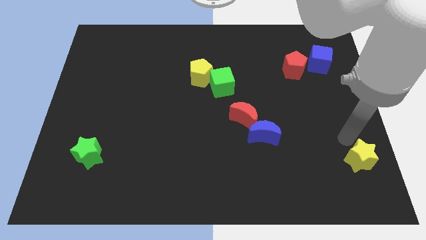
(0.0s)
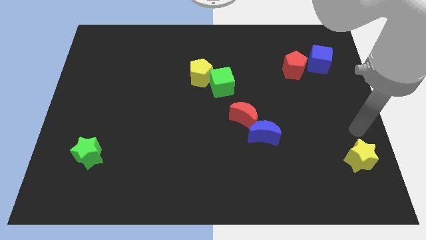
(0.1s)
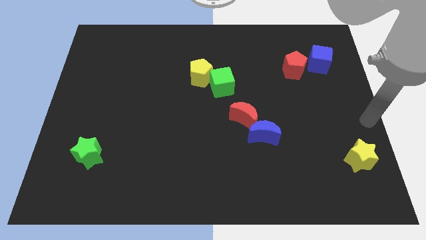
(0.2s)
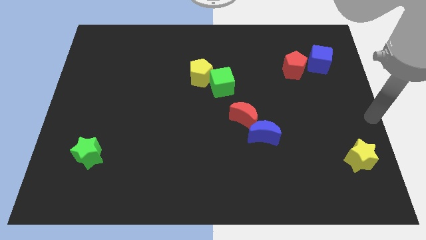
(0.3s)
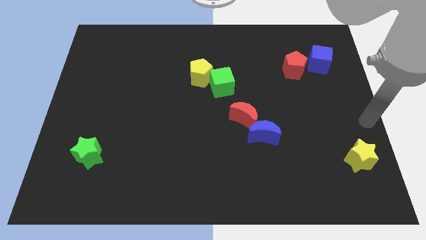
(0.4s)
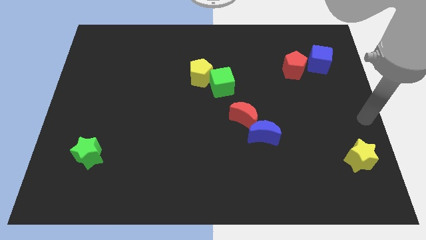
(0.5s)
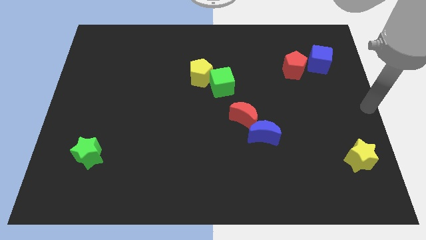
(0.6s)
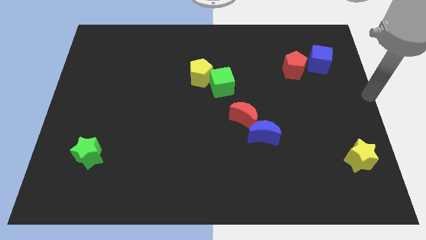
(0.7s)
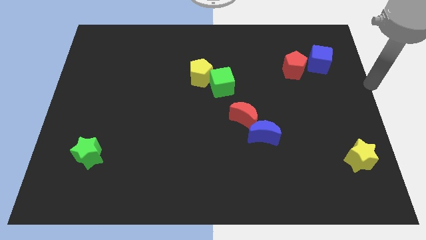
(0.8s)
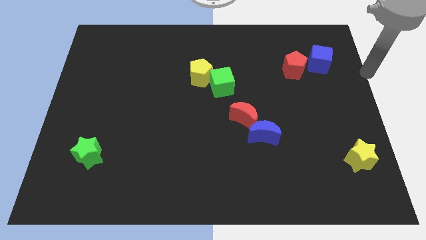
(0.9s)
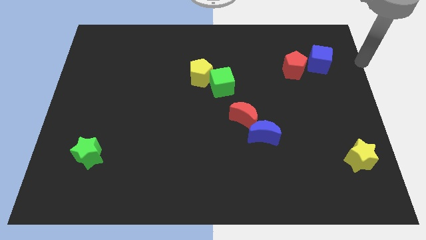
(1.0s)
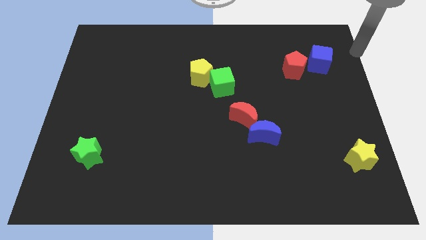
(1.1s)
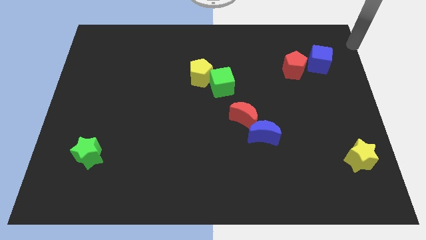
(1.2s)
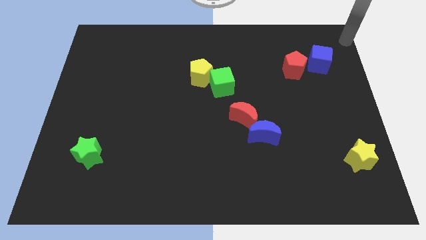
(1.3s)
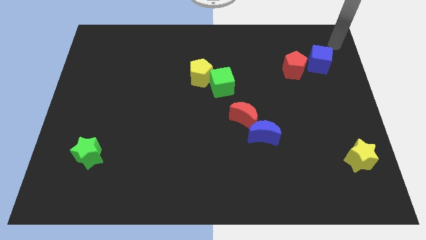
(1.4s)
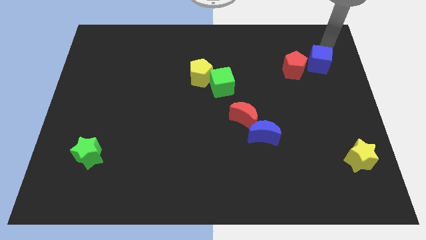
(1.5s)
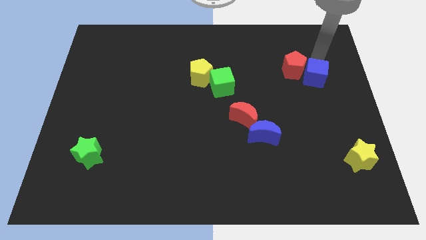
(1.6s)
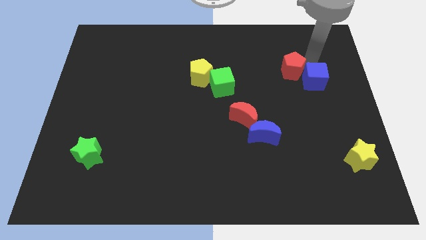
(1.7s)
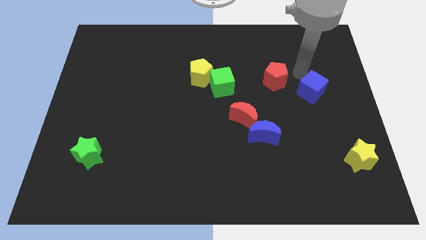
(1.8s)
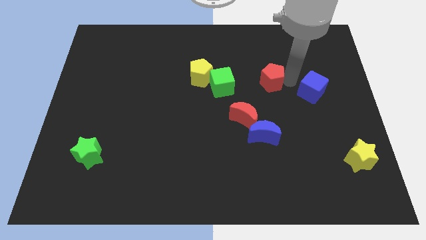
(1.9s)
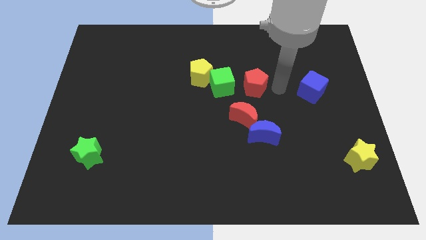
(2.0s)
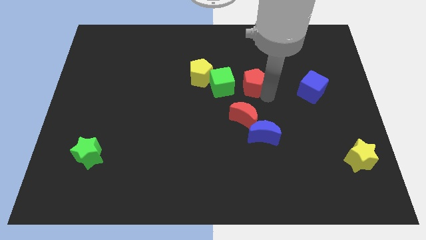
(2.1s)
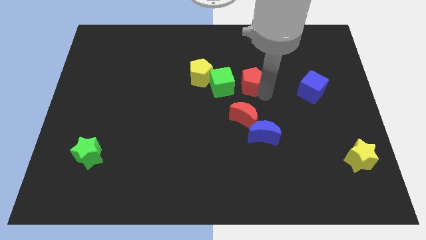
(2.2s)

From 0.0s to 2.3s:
separate the red pentagon and blue cube from each other

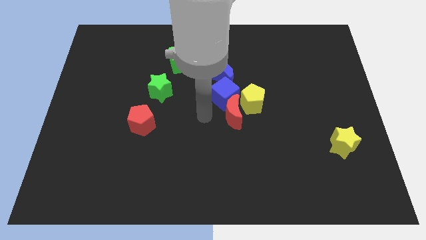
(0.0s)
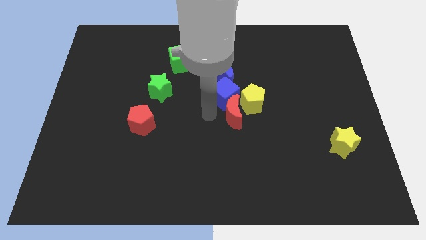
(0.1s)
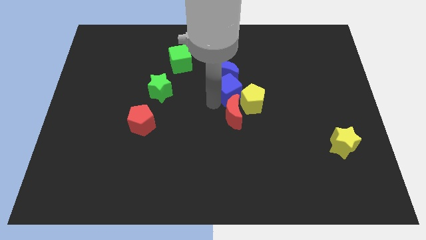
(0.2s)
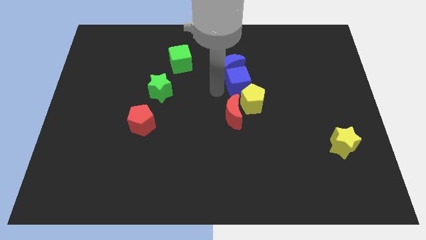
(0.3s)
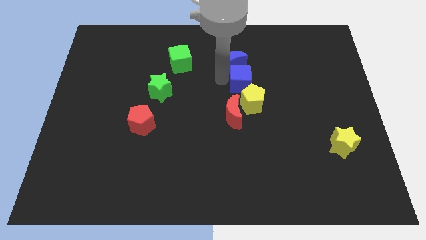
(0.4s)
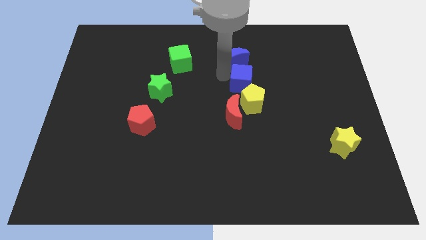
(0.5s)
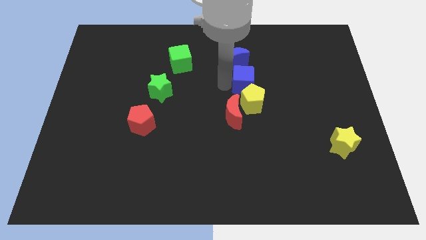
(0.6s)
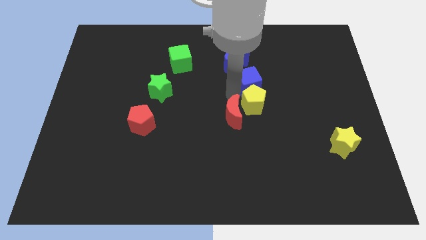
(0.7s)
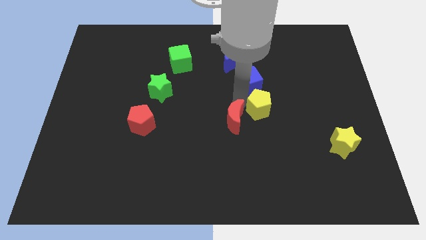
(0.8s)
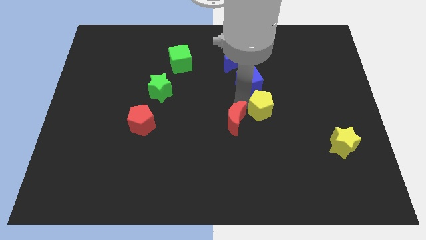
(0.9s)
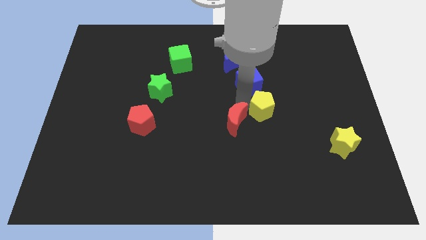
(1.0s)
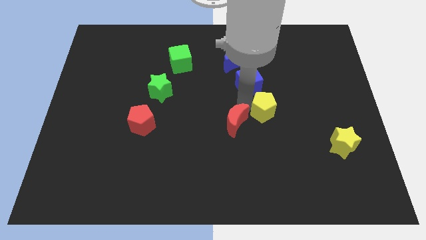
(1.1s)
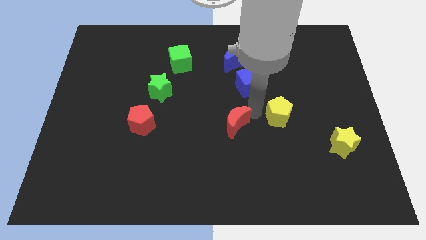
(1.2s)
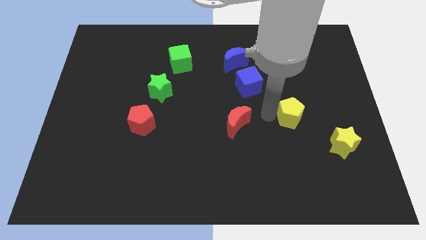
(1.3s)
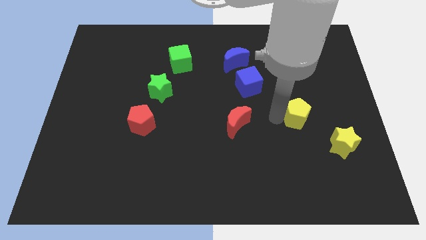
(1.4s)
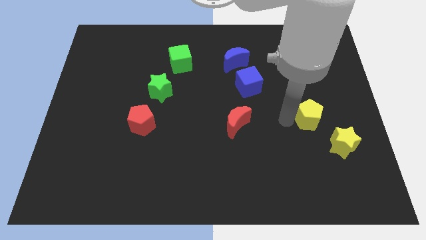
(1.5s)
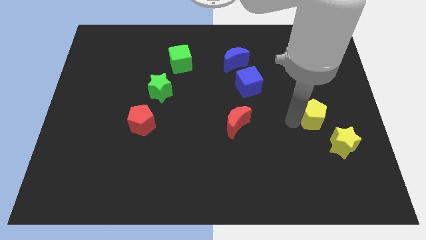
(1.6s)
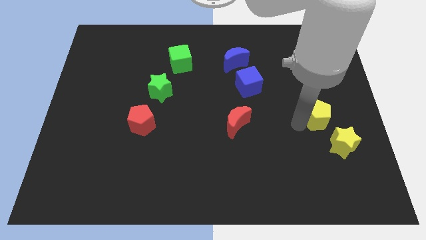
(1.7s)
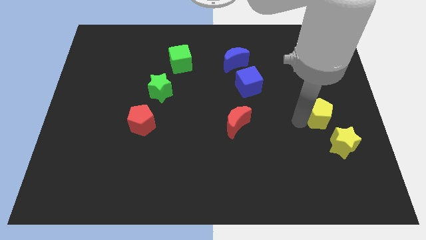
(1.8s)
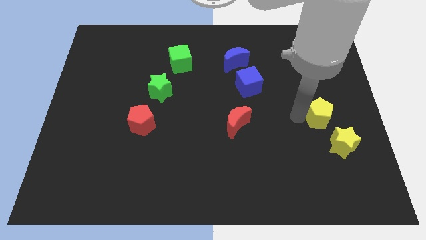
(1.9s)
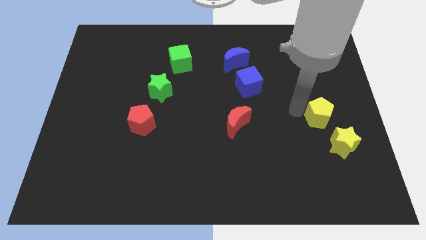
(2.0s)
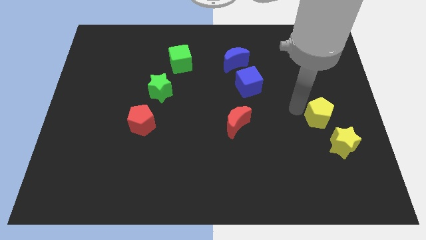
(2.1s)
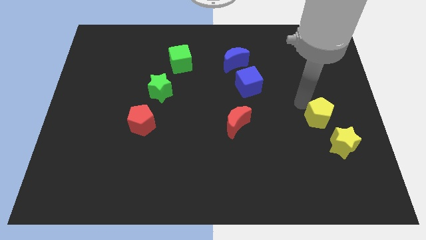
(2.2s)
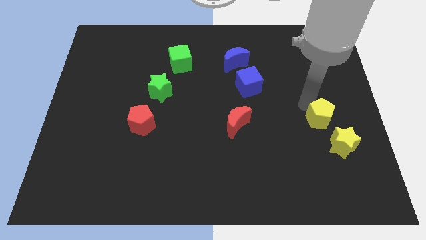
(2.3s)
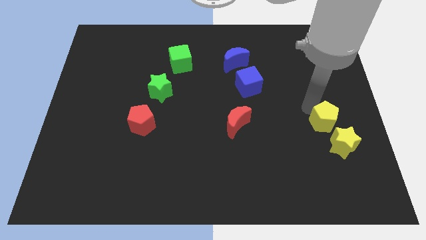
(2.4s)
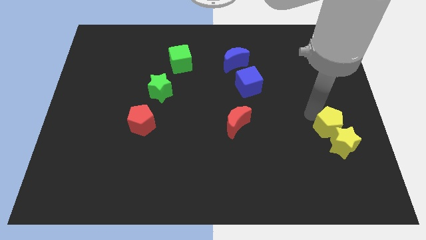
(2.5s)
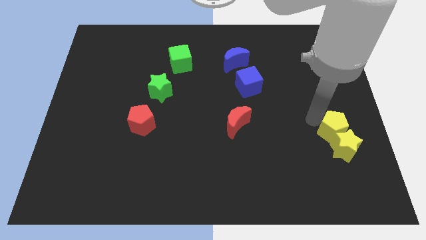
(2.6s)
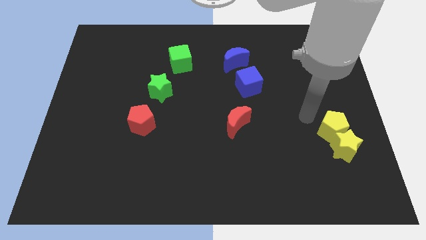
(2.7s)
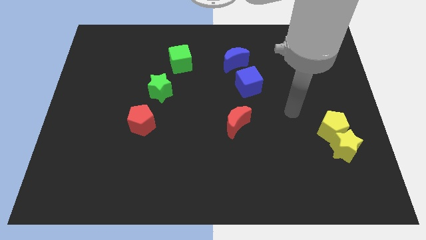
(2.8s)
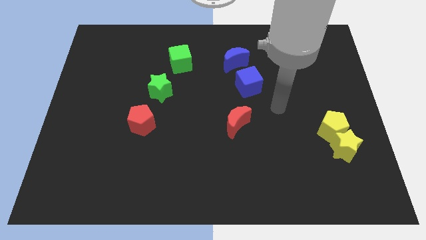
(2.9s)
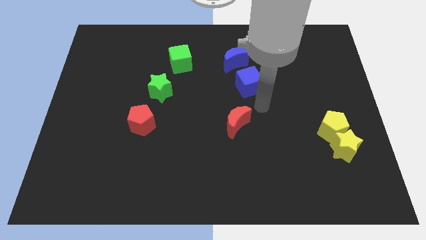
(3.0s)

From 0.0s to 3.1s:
move yellow pentagon close to the yellow star

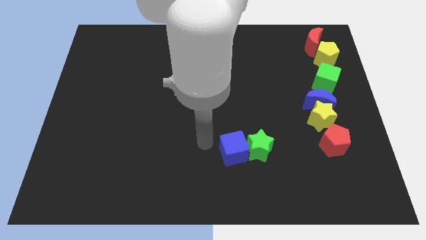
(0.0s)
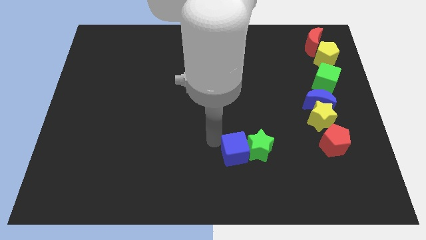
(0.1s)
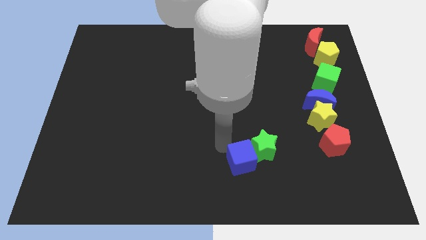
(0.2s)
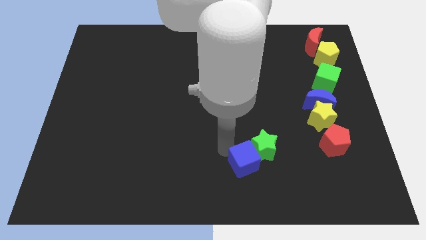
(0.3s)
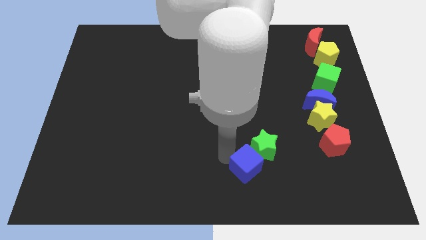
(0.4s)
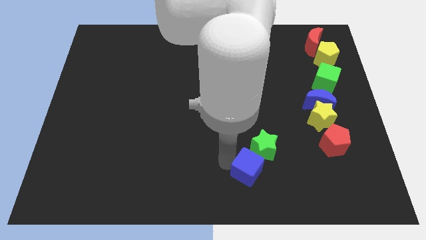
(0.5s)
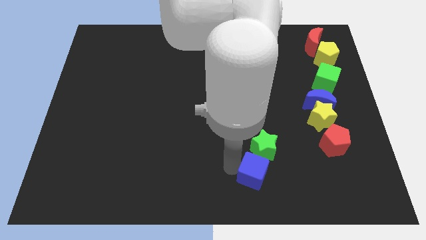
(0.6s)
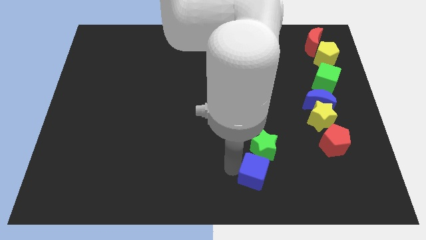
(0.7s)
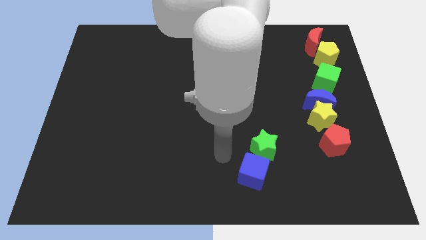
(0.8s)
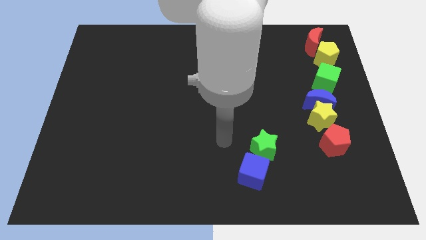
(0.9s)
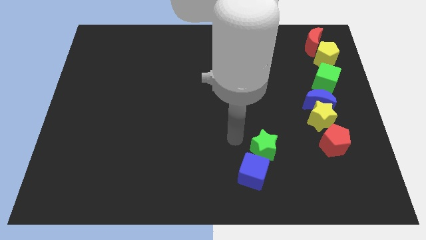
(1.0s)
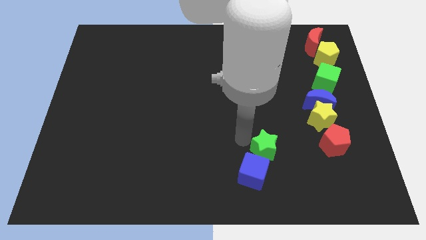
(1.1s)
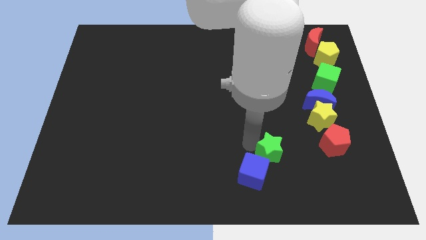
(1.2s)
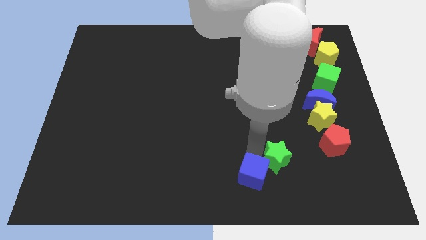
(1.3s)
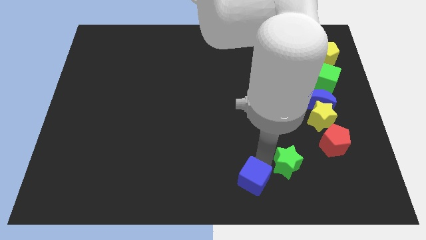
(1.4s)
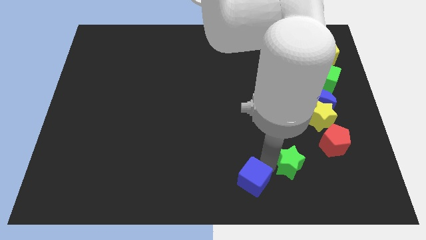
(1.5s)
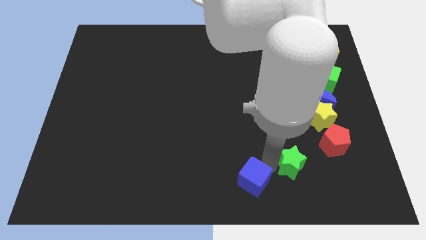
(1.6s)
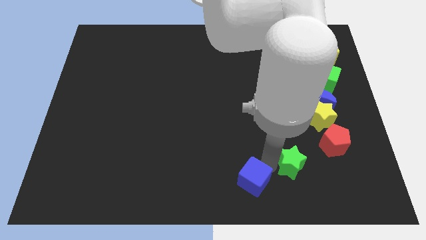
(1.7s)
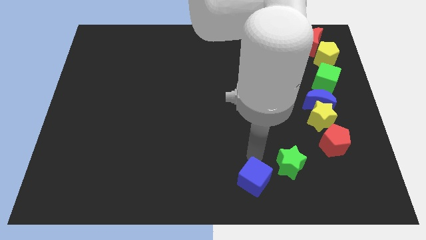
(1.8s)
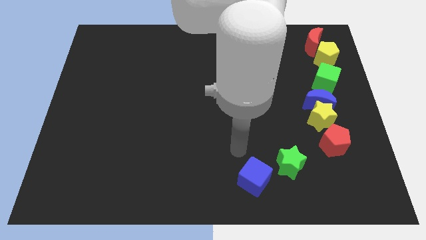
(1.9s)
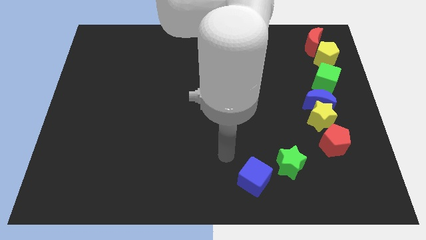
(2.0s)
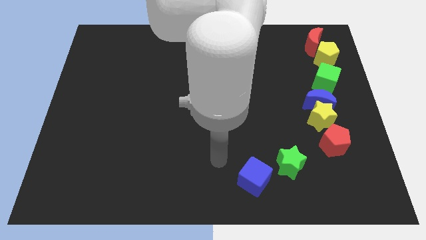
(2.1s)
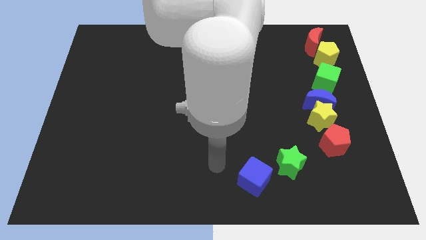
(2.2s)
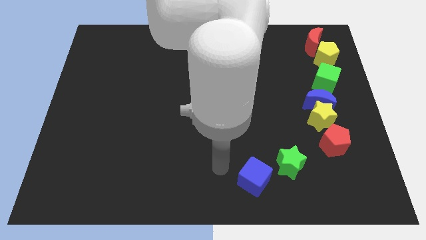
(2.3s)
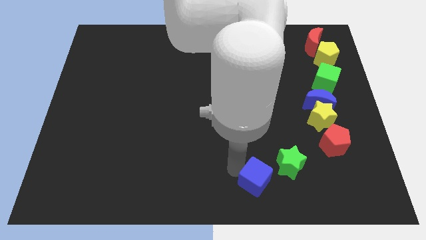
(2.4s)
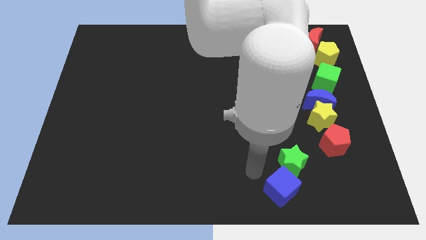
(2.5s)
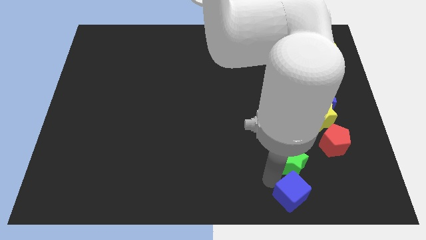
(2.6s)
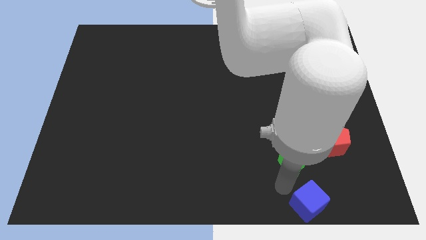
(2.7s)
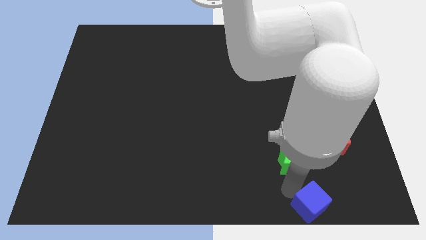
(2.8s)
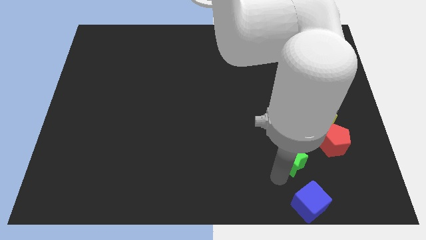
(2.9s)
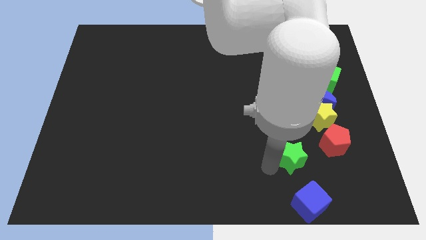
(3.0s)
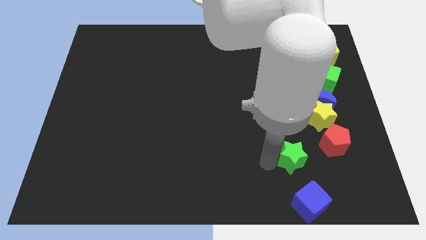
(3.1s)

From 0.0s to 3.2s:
separate the blue cube from the green star

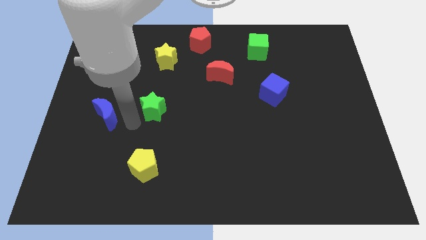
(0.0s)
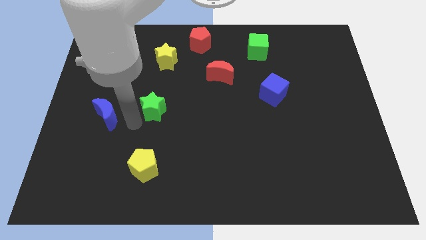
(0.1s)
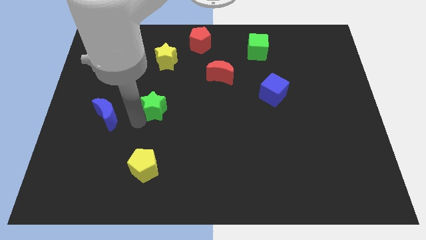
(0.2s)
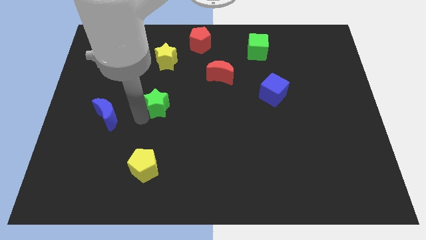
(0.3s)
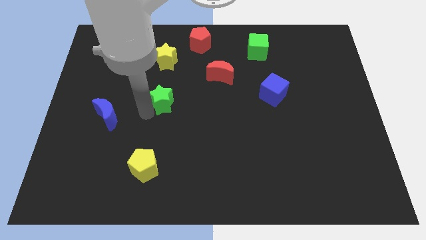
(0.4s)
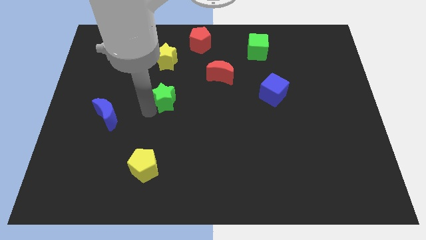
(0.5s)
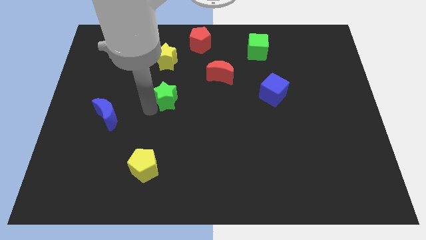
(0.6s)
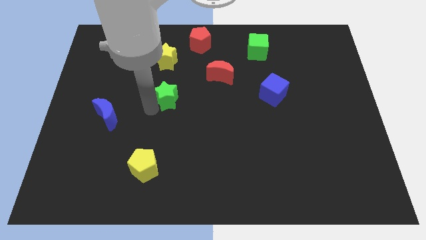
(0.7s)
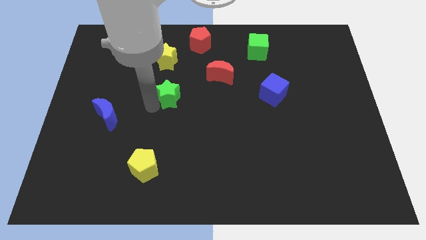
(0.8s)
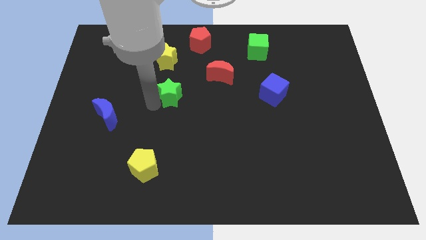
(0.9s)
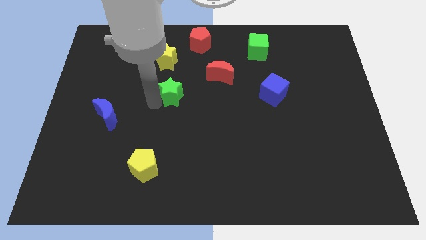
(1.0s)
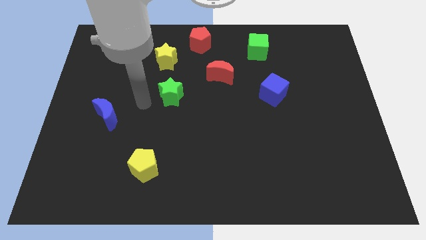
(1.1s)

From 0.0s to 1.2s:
move the green star to the bottom of the yellow star
